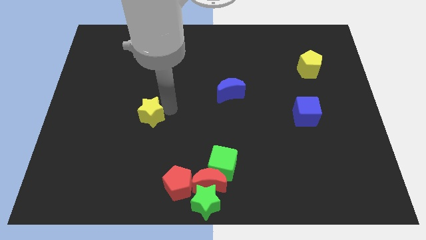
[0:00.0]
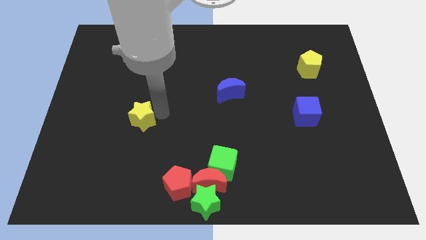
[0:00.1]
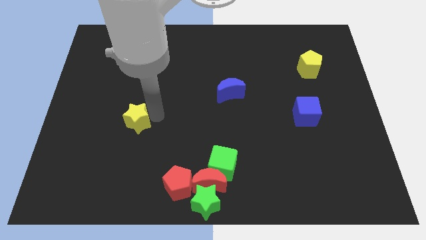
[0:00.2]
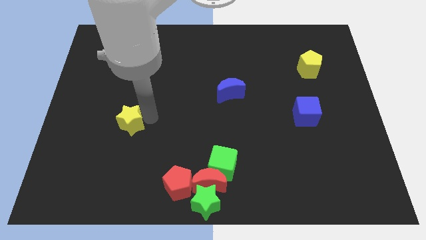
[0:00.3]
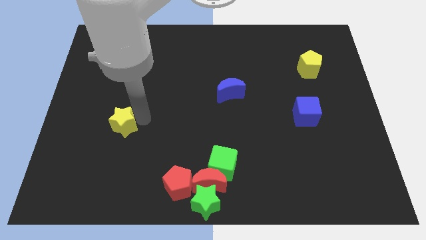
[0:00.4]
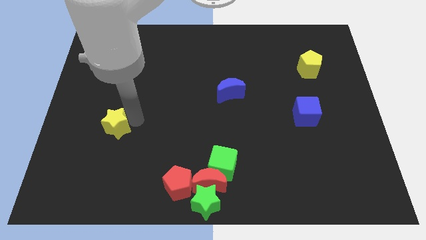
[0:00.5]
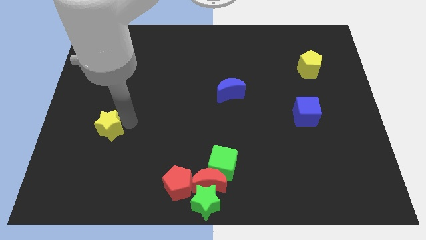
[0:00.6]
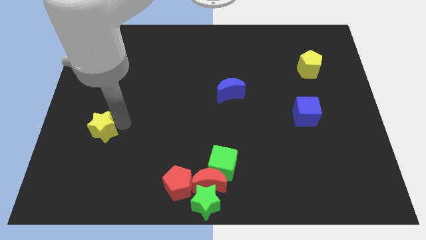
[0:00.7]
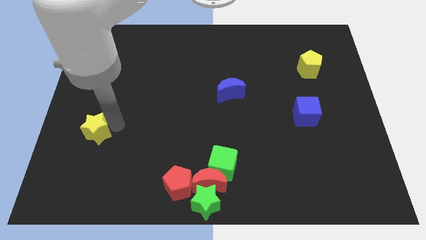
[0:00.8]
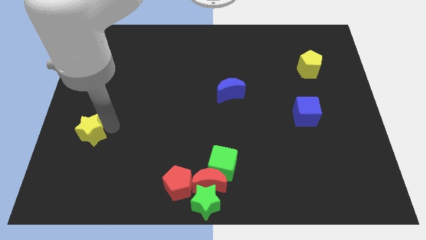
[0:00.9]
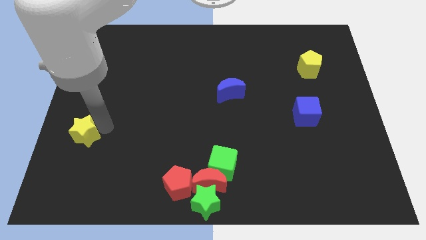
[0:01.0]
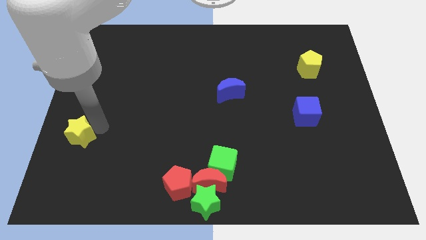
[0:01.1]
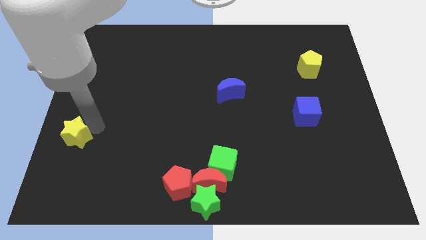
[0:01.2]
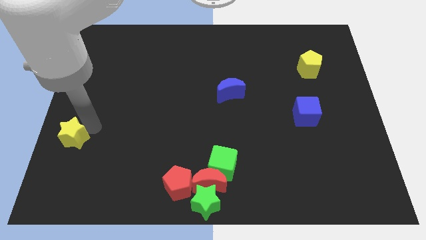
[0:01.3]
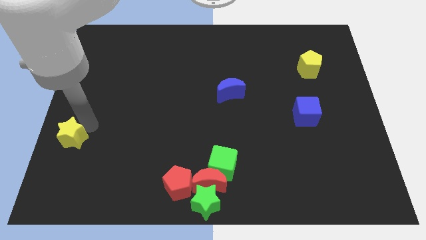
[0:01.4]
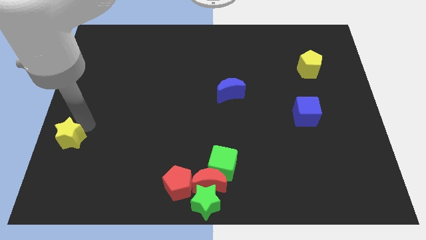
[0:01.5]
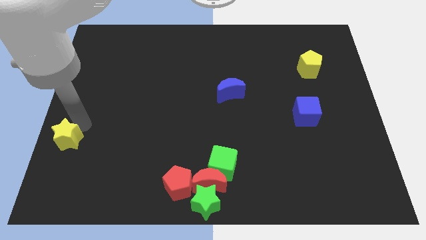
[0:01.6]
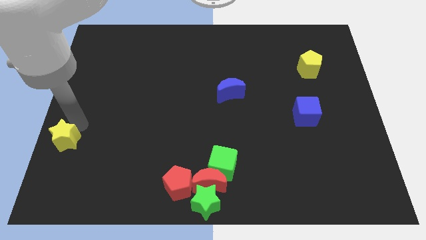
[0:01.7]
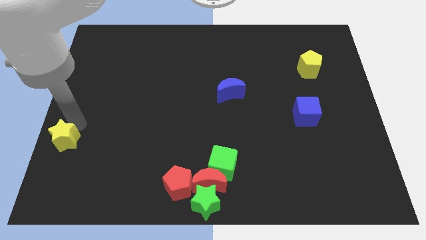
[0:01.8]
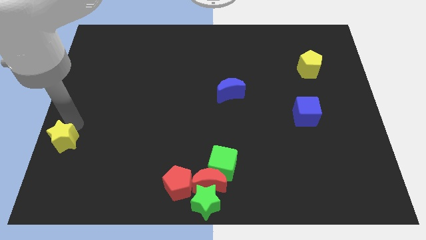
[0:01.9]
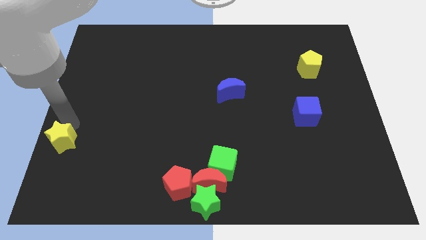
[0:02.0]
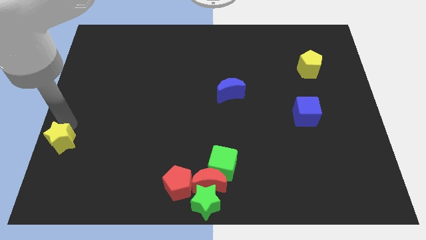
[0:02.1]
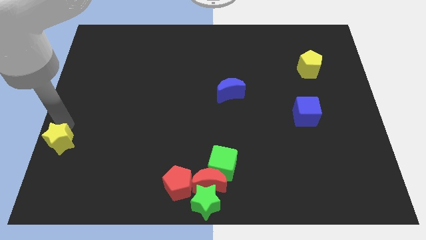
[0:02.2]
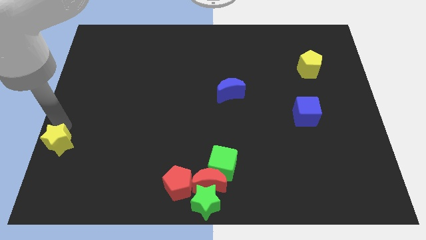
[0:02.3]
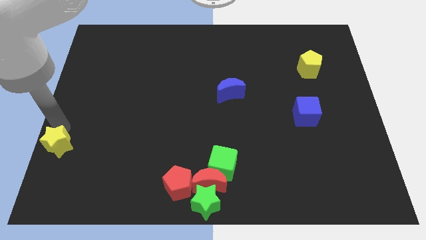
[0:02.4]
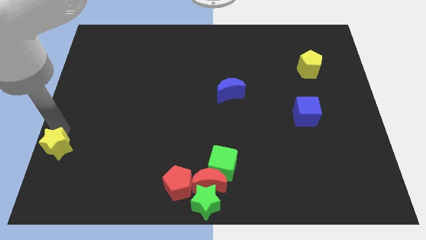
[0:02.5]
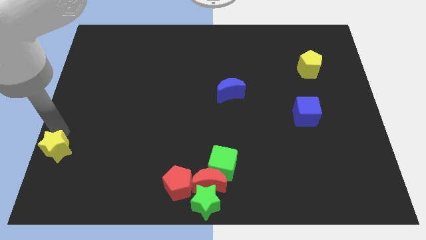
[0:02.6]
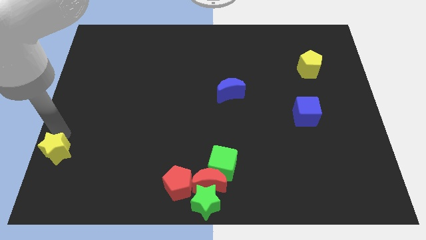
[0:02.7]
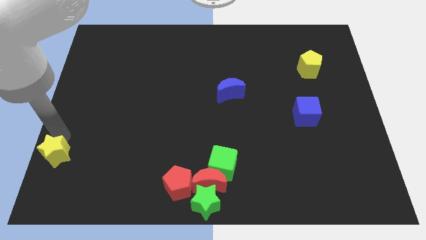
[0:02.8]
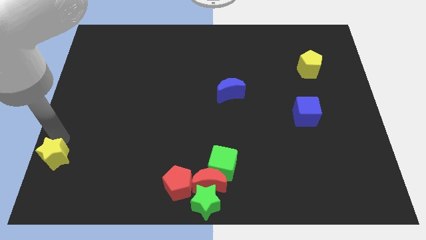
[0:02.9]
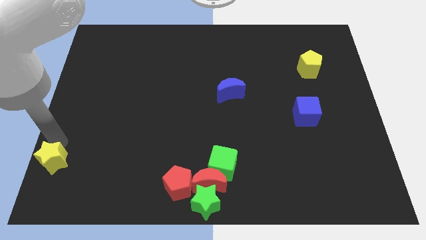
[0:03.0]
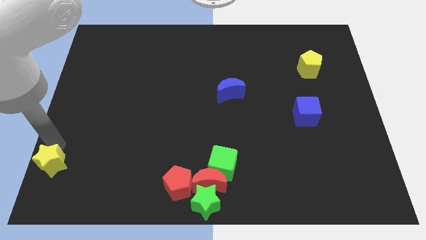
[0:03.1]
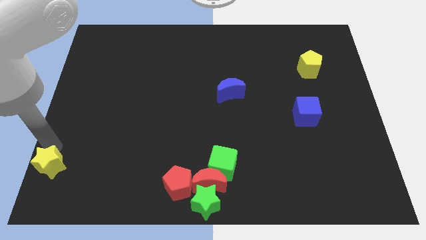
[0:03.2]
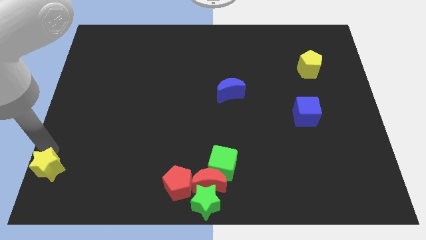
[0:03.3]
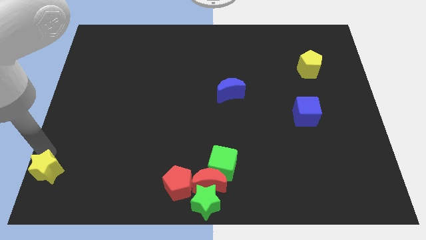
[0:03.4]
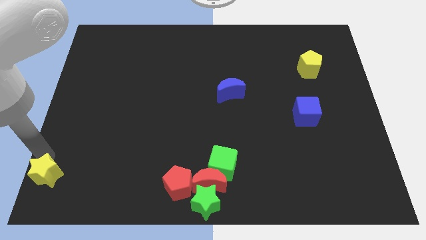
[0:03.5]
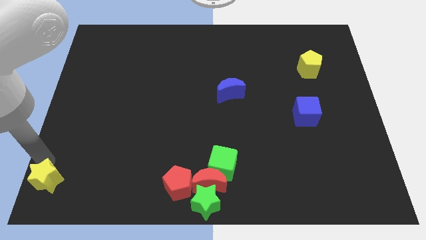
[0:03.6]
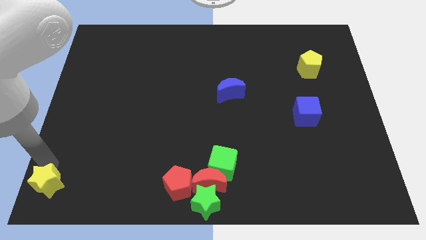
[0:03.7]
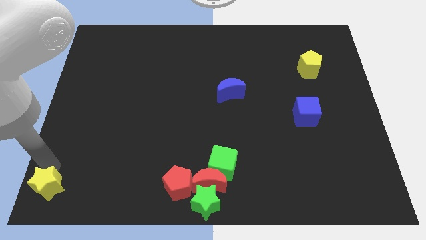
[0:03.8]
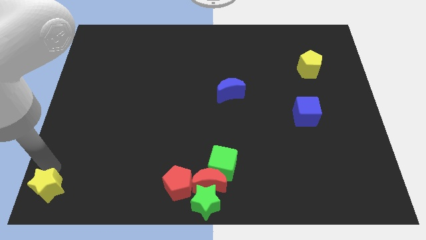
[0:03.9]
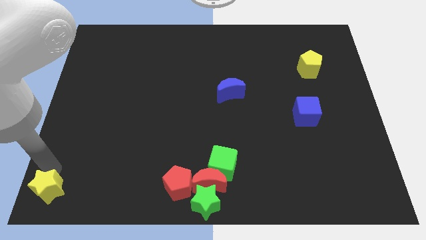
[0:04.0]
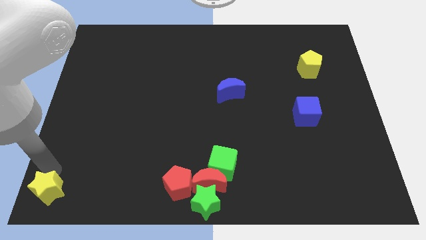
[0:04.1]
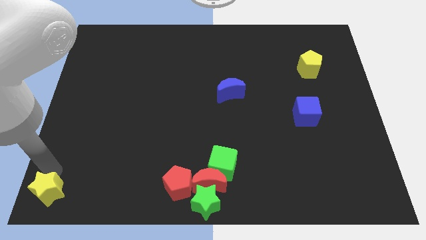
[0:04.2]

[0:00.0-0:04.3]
push the yellow star to the bottom left corner of the board

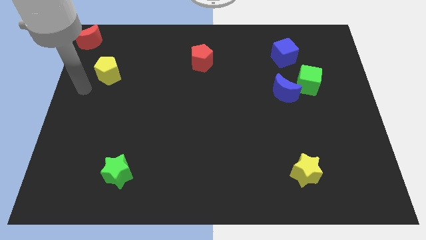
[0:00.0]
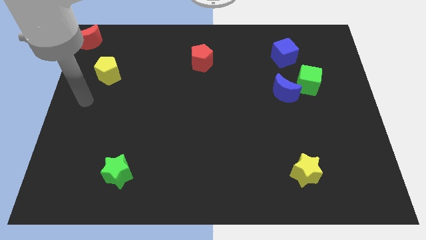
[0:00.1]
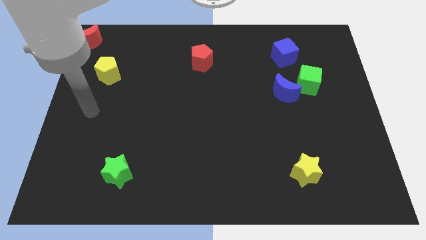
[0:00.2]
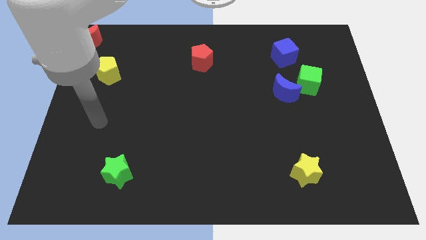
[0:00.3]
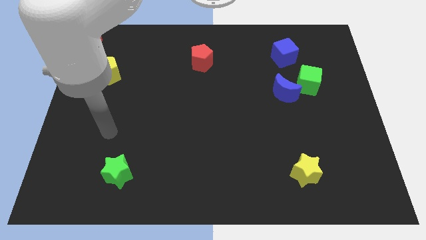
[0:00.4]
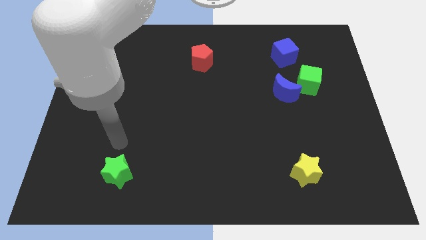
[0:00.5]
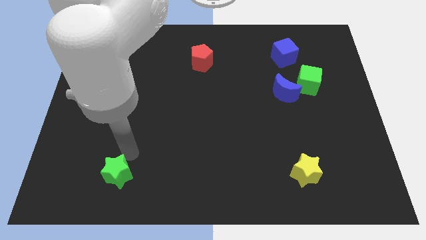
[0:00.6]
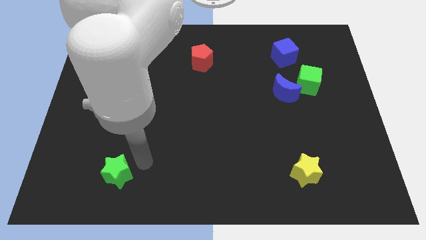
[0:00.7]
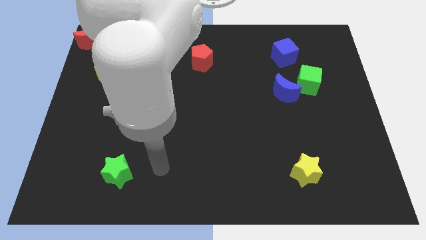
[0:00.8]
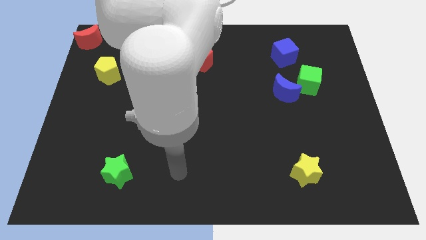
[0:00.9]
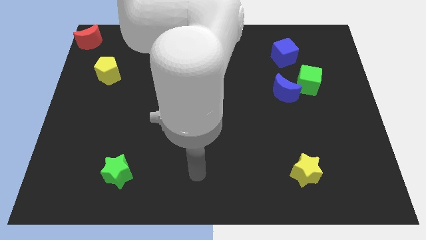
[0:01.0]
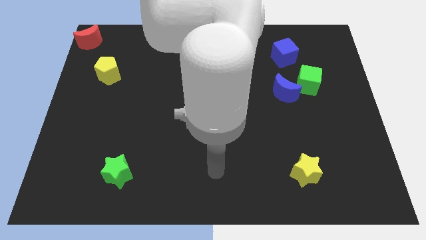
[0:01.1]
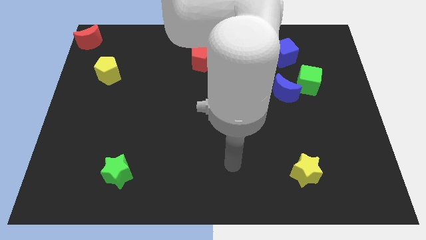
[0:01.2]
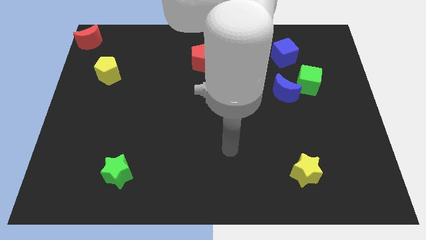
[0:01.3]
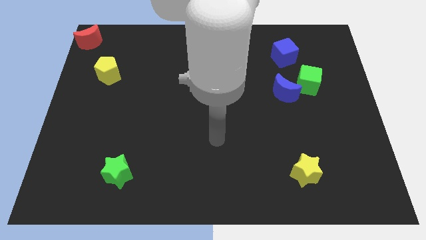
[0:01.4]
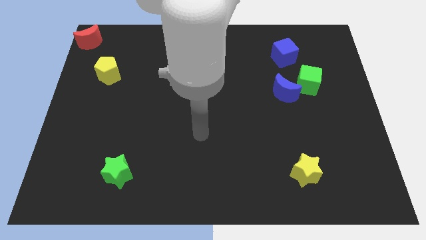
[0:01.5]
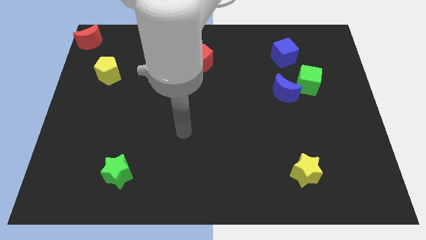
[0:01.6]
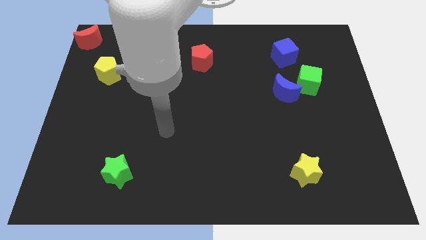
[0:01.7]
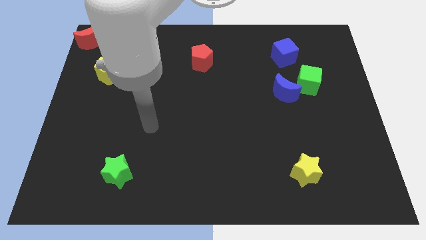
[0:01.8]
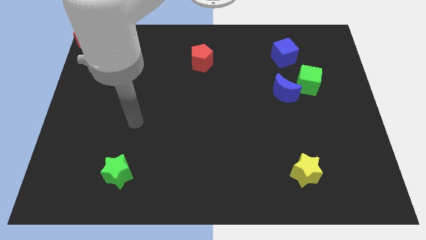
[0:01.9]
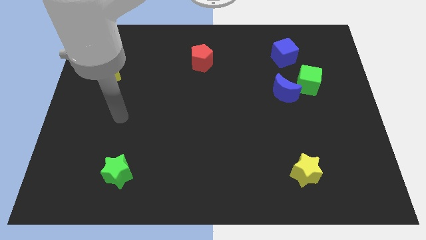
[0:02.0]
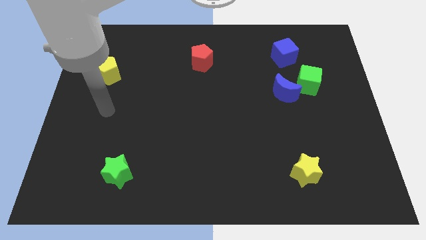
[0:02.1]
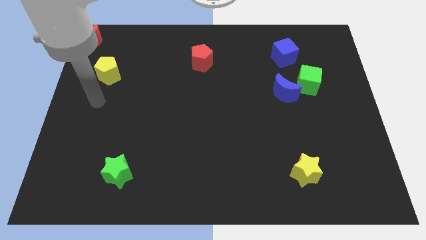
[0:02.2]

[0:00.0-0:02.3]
put the arm below the yellow pentagon

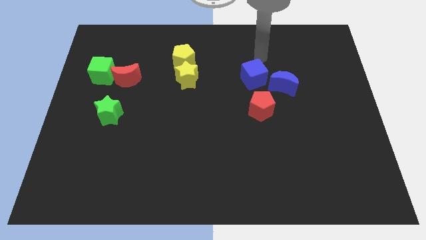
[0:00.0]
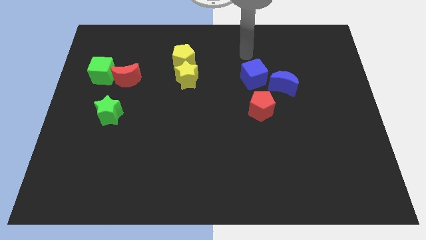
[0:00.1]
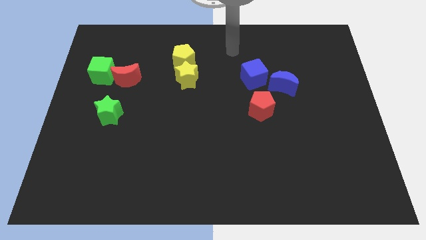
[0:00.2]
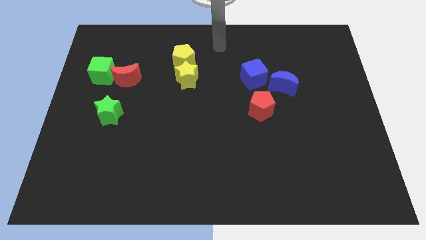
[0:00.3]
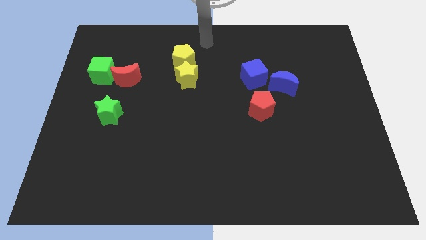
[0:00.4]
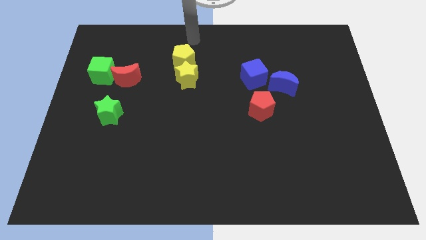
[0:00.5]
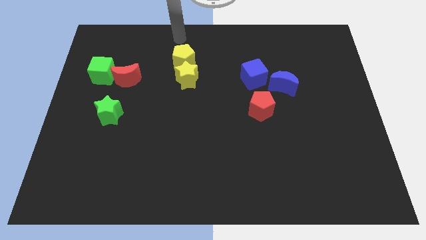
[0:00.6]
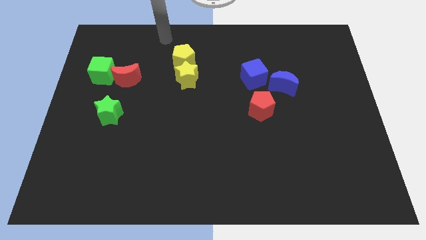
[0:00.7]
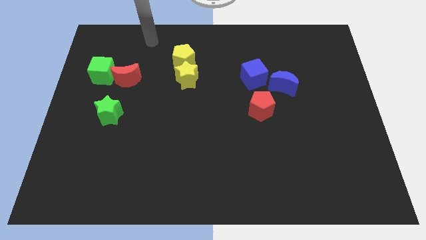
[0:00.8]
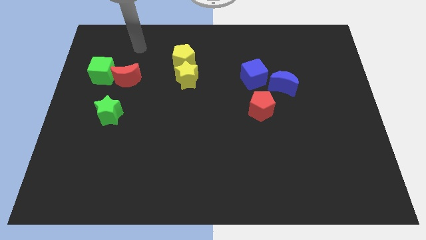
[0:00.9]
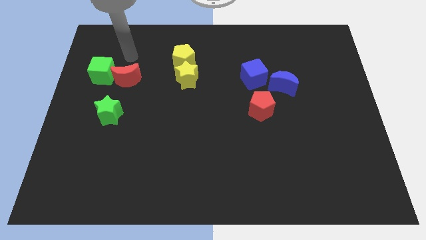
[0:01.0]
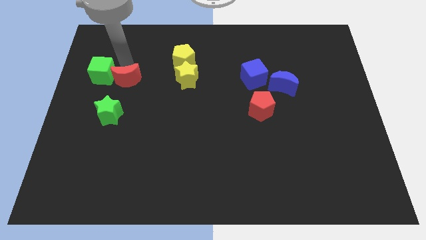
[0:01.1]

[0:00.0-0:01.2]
move arm towards red moon

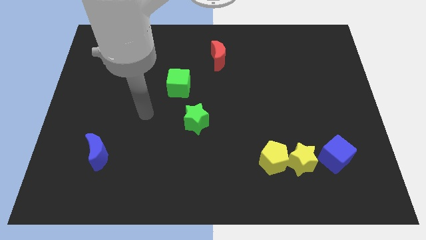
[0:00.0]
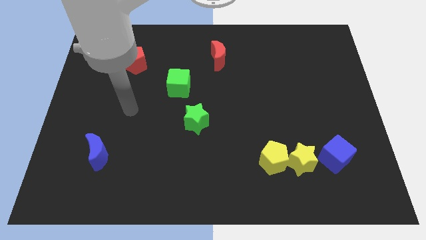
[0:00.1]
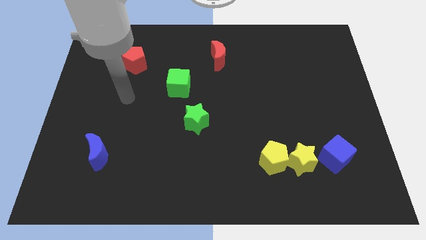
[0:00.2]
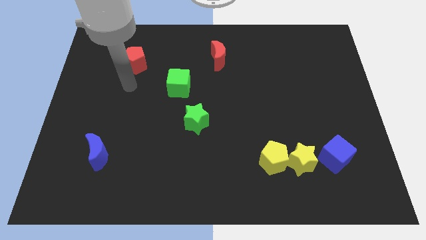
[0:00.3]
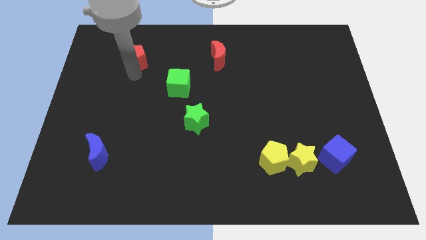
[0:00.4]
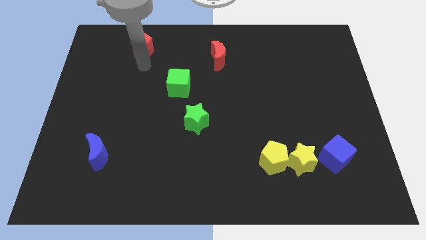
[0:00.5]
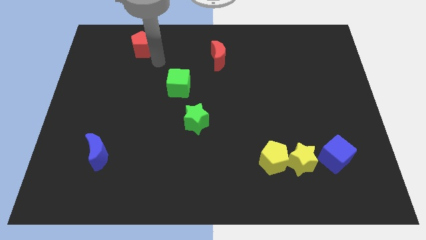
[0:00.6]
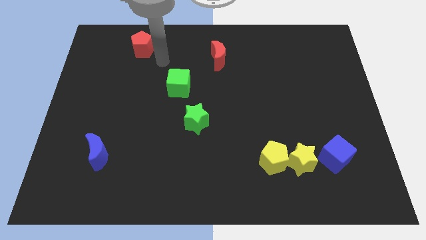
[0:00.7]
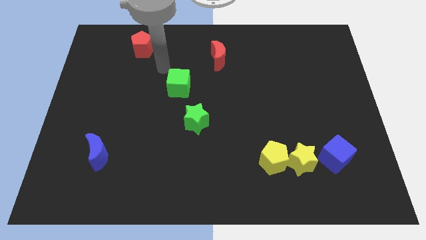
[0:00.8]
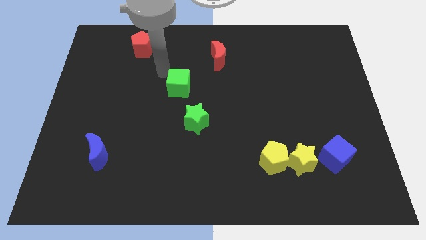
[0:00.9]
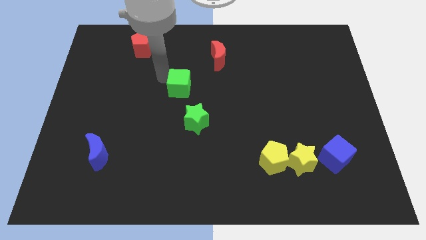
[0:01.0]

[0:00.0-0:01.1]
push the red pentagon to the top left

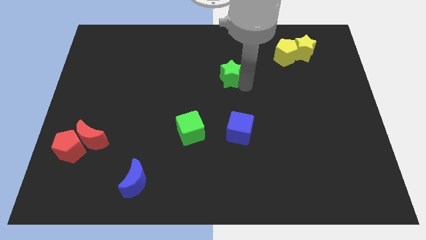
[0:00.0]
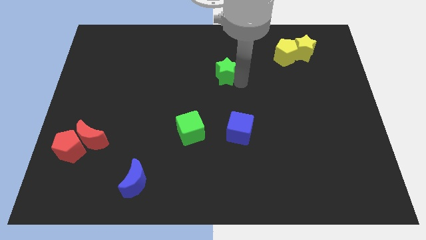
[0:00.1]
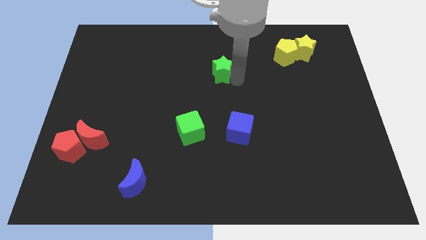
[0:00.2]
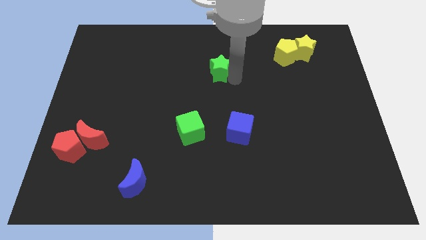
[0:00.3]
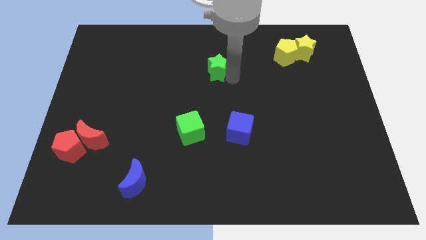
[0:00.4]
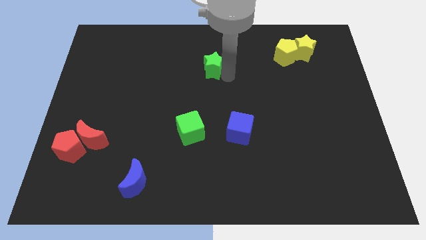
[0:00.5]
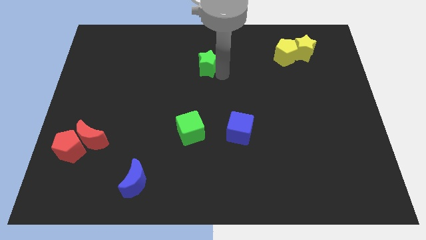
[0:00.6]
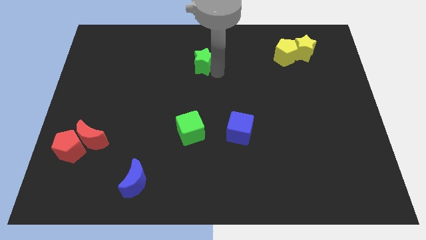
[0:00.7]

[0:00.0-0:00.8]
push the green star to the top of the board
